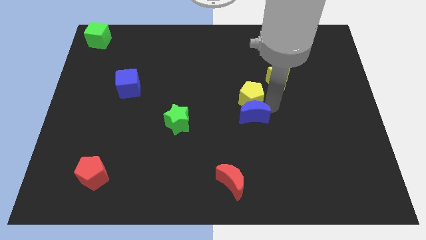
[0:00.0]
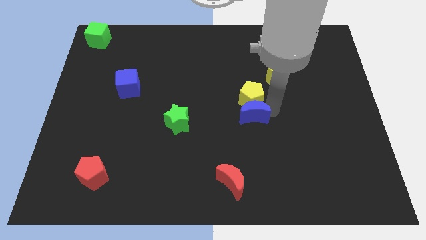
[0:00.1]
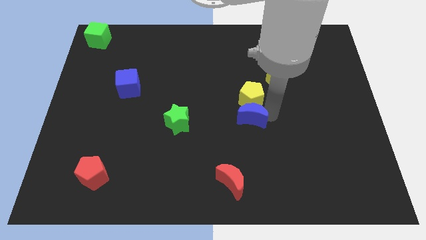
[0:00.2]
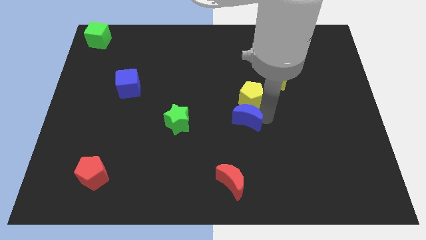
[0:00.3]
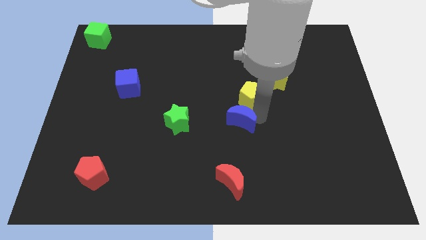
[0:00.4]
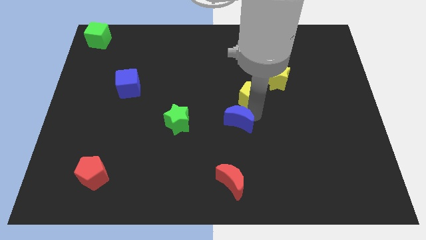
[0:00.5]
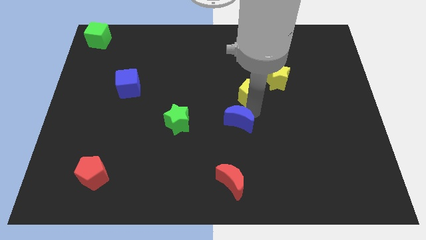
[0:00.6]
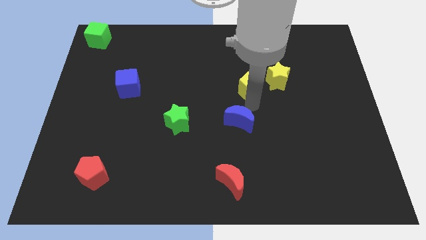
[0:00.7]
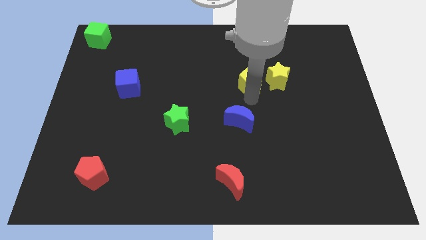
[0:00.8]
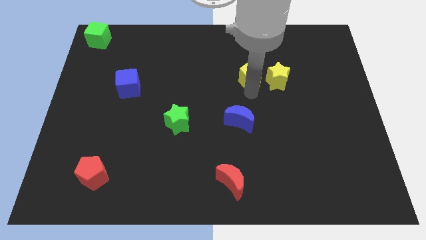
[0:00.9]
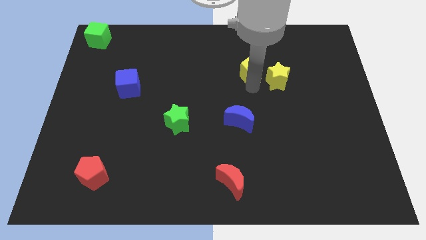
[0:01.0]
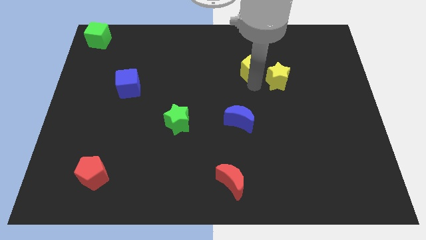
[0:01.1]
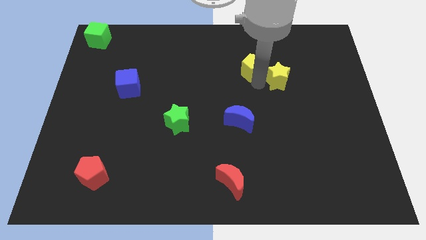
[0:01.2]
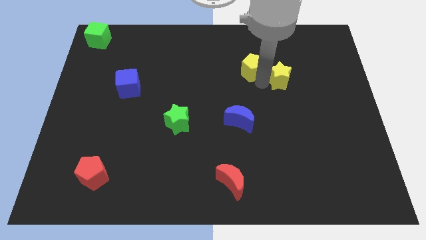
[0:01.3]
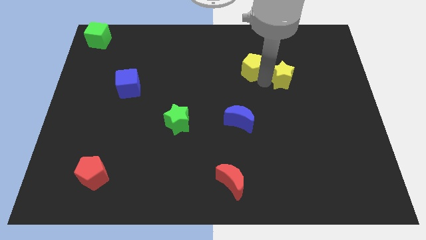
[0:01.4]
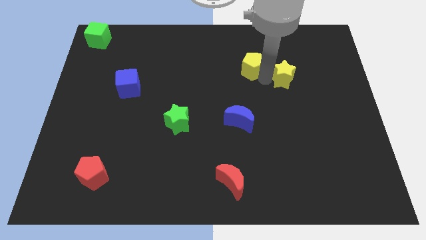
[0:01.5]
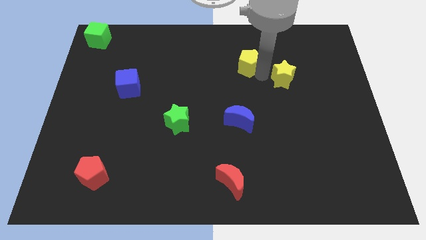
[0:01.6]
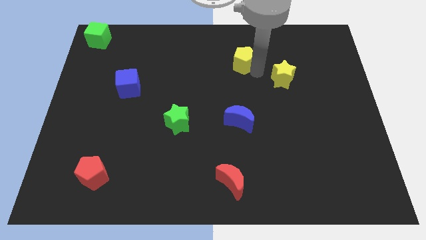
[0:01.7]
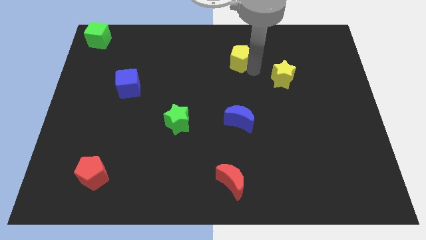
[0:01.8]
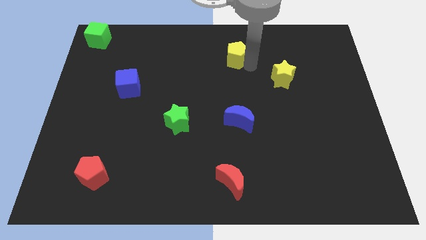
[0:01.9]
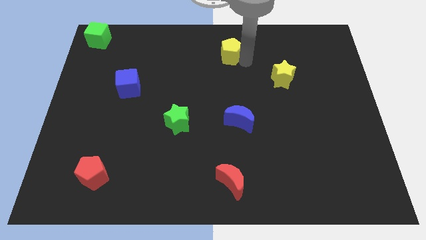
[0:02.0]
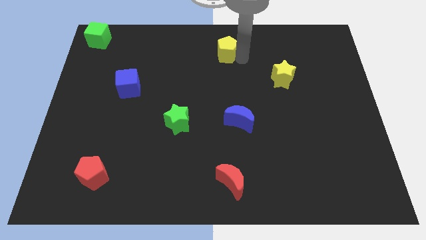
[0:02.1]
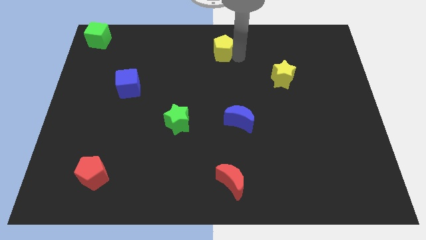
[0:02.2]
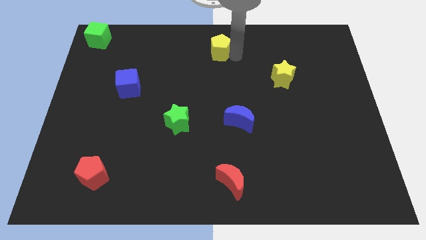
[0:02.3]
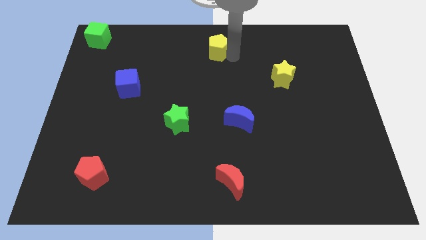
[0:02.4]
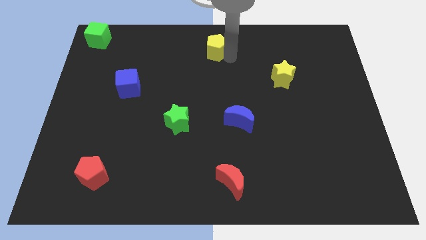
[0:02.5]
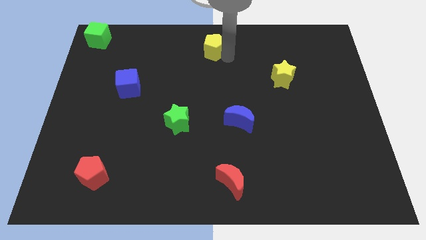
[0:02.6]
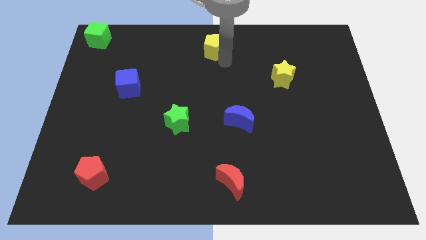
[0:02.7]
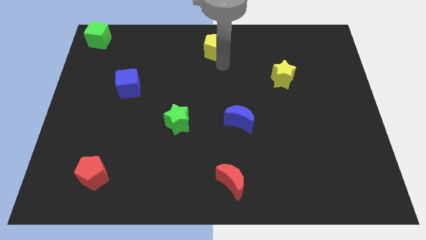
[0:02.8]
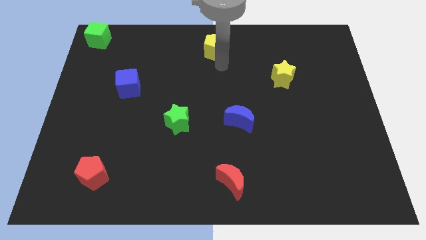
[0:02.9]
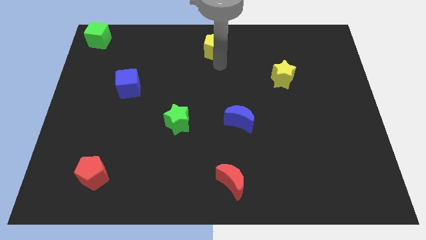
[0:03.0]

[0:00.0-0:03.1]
separate yellow pentagon from blue moon

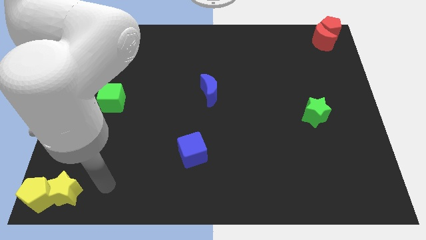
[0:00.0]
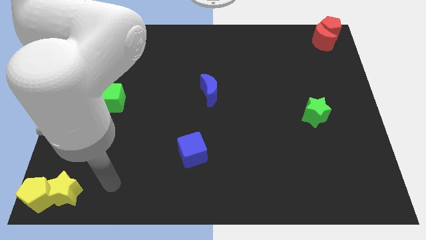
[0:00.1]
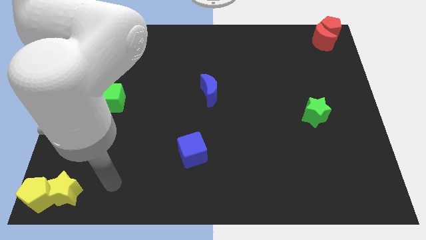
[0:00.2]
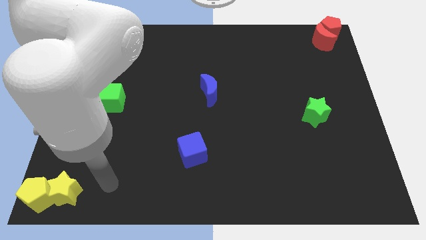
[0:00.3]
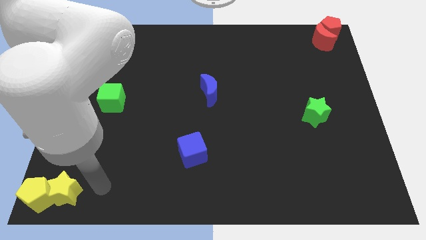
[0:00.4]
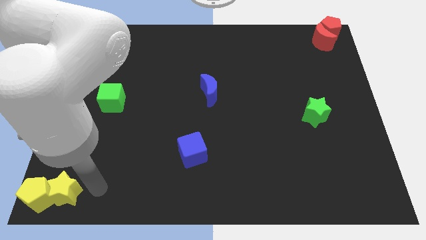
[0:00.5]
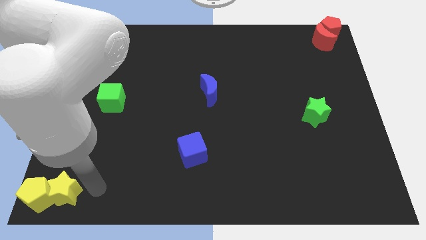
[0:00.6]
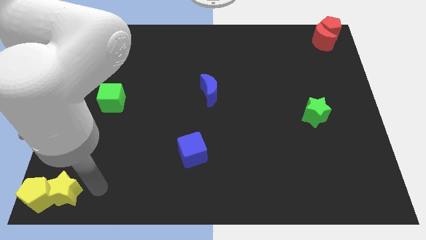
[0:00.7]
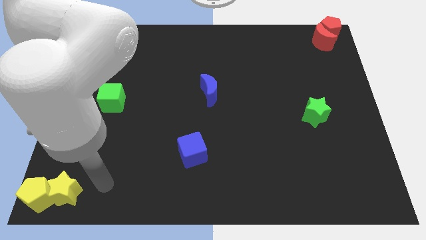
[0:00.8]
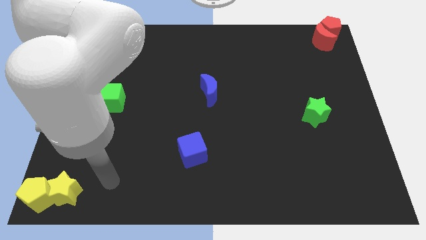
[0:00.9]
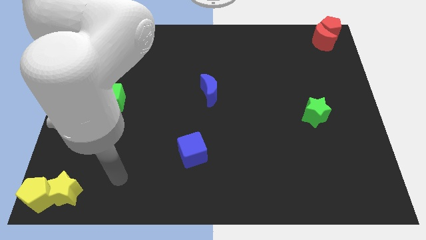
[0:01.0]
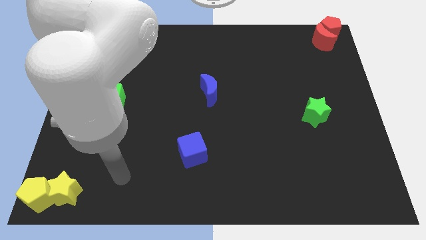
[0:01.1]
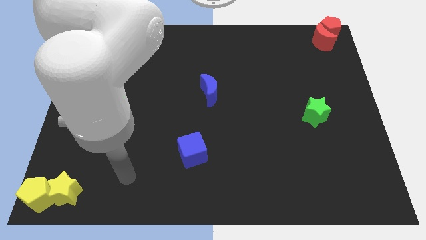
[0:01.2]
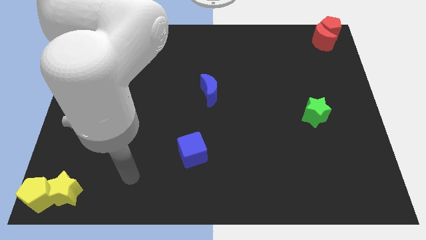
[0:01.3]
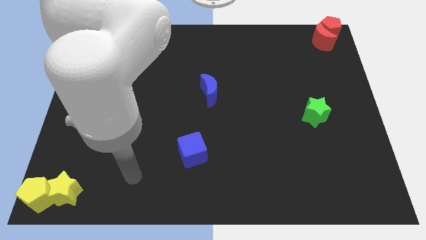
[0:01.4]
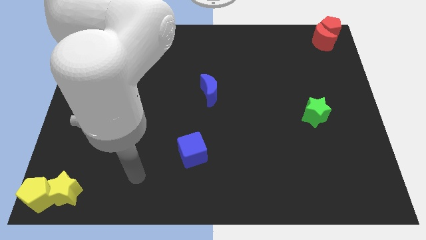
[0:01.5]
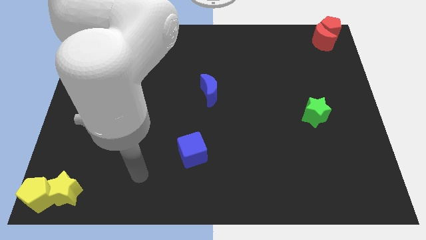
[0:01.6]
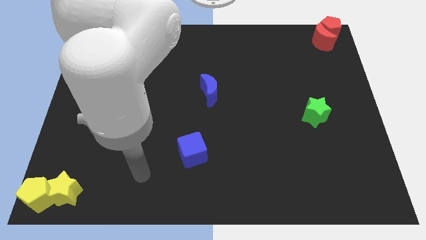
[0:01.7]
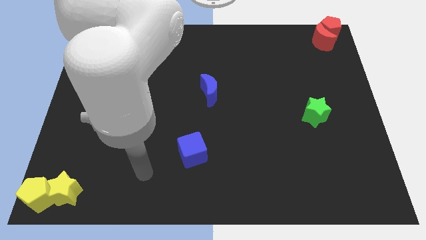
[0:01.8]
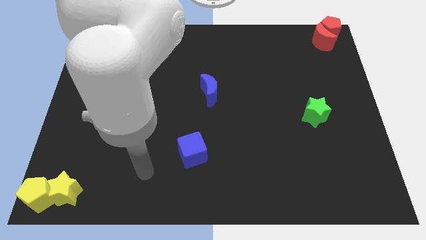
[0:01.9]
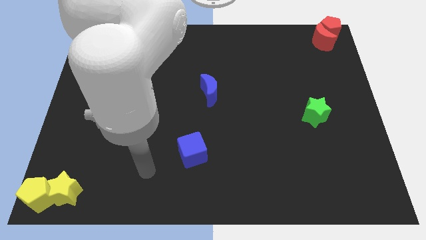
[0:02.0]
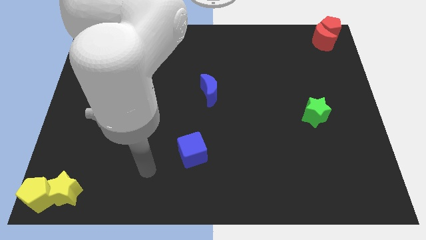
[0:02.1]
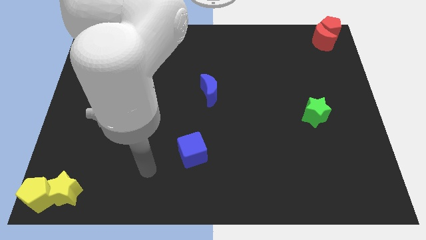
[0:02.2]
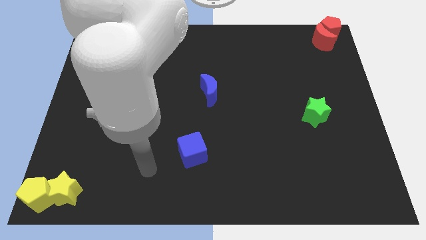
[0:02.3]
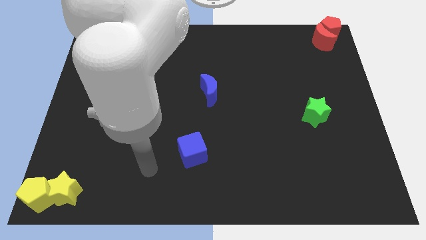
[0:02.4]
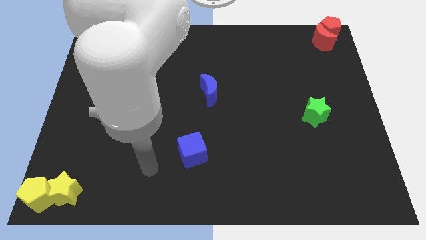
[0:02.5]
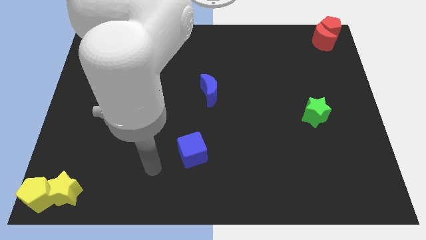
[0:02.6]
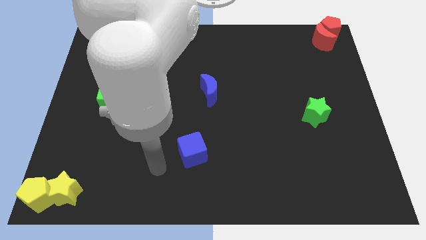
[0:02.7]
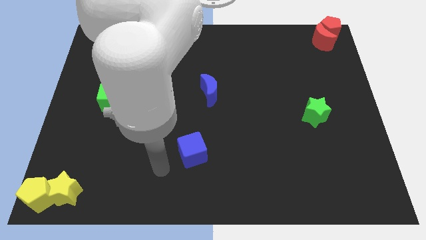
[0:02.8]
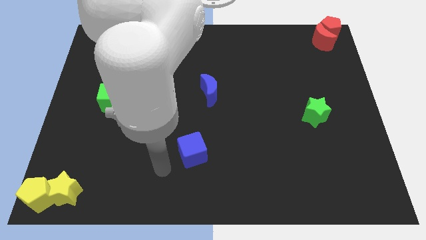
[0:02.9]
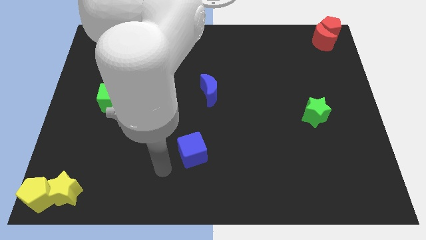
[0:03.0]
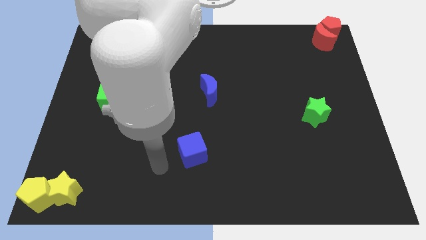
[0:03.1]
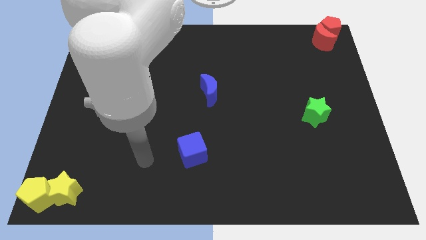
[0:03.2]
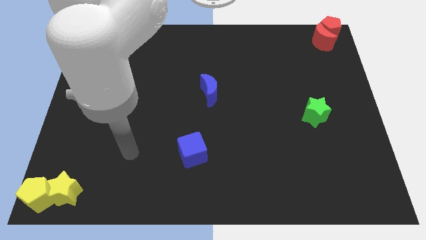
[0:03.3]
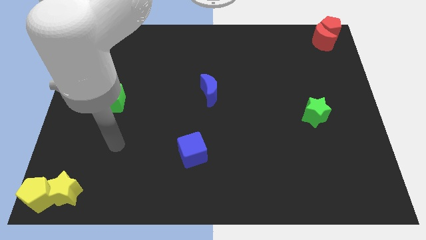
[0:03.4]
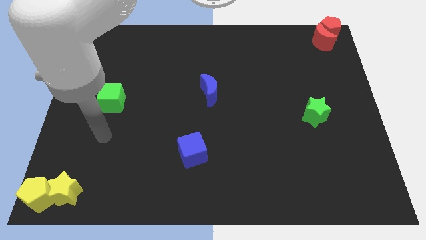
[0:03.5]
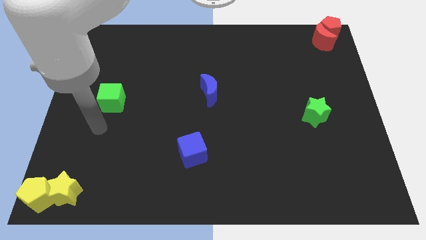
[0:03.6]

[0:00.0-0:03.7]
move your arm below the green cube

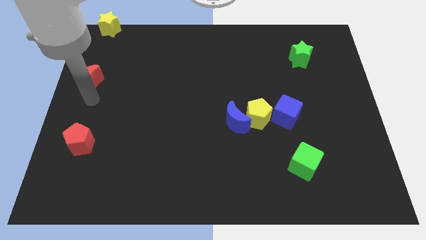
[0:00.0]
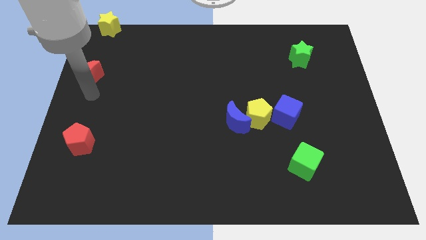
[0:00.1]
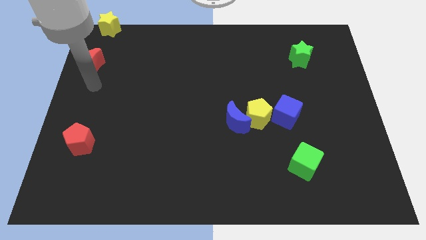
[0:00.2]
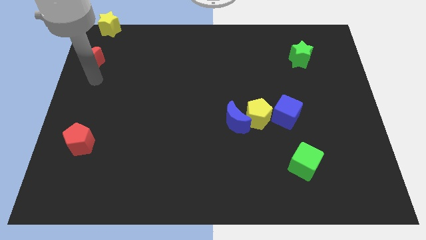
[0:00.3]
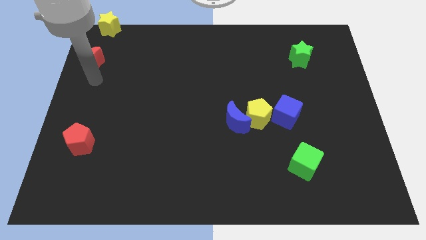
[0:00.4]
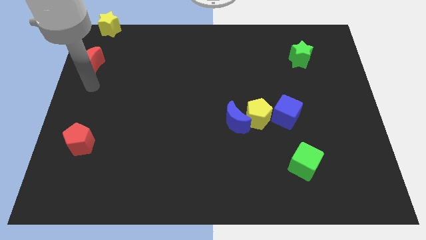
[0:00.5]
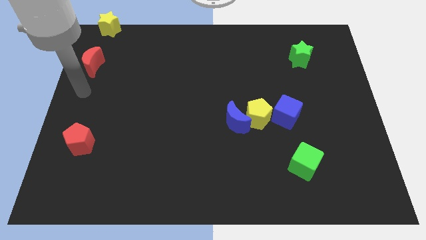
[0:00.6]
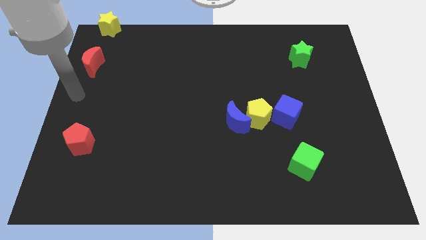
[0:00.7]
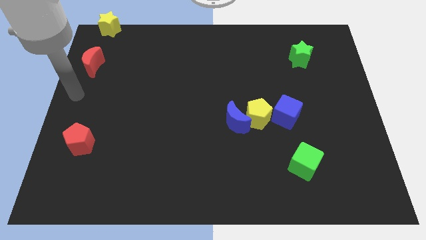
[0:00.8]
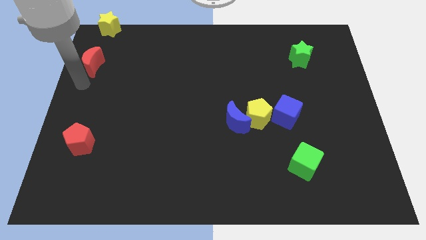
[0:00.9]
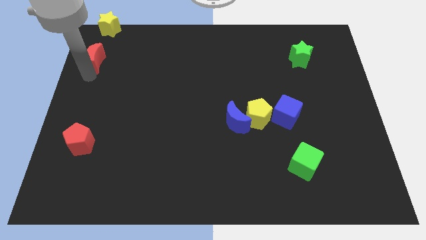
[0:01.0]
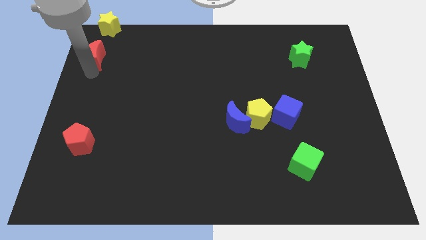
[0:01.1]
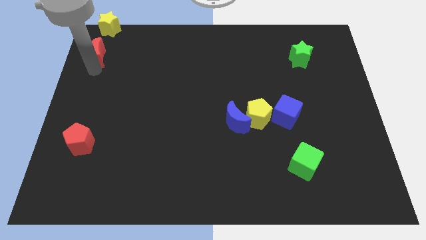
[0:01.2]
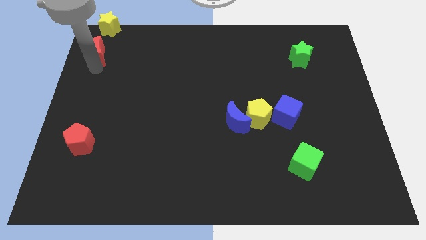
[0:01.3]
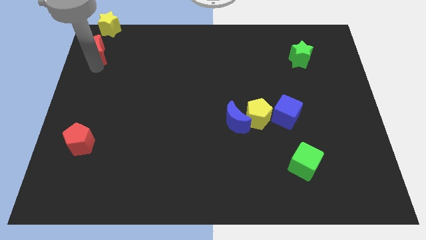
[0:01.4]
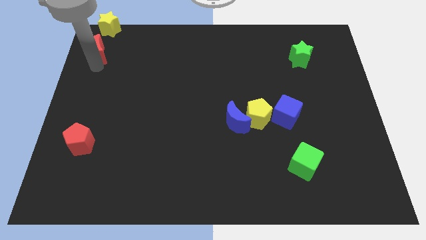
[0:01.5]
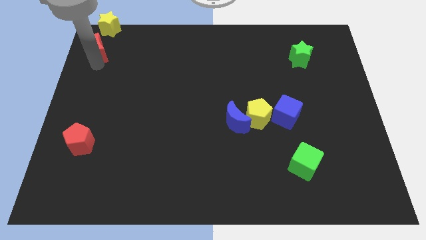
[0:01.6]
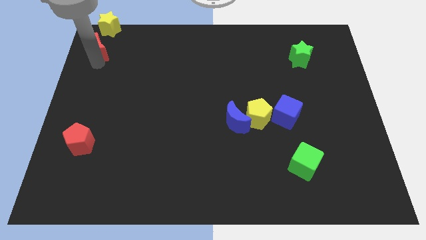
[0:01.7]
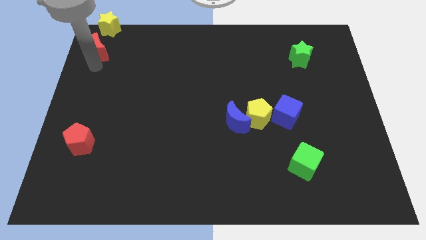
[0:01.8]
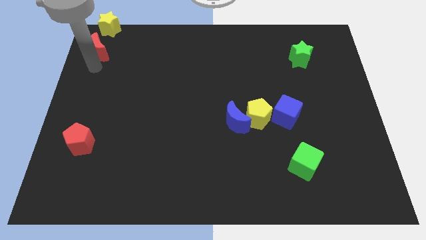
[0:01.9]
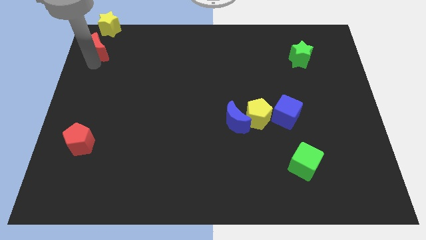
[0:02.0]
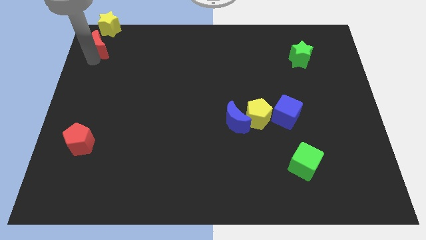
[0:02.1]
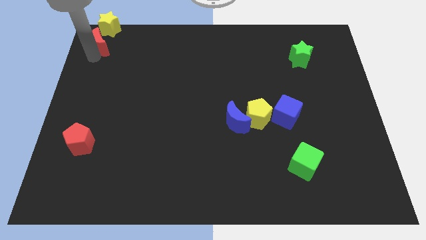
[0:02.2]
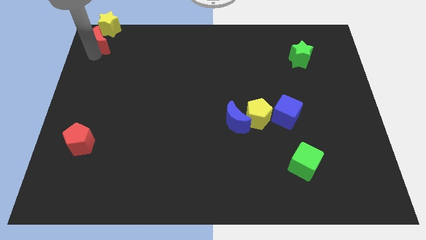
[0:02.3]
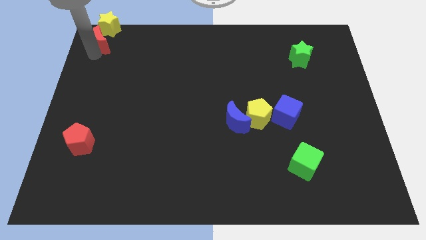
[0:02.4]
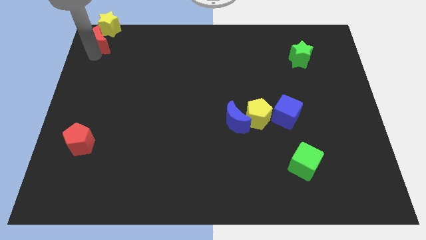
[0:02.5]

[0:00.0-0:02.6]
place red crescent below yellow pentagon
